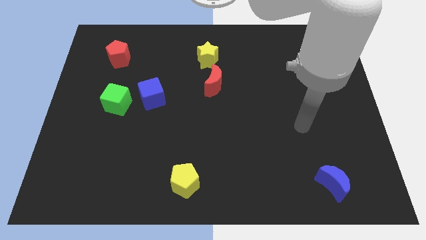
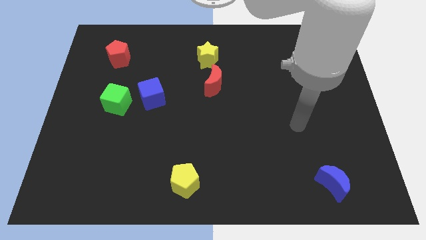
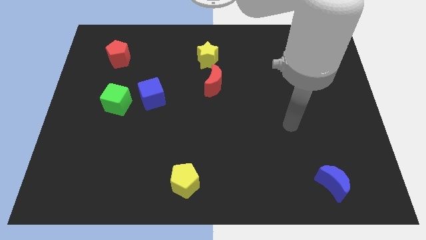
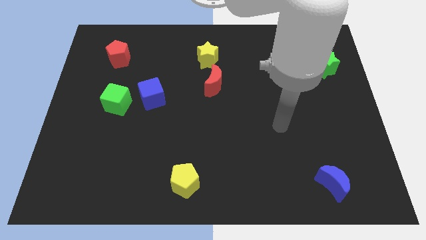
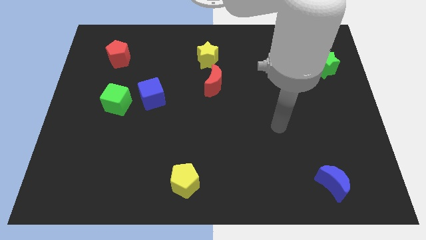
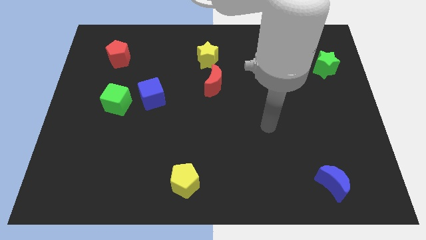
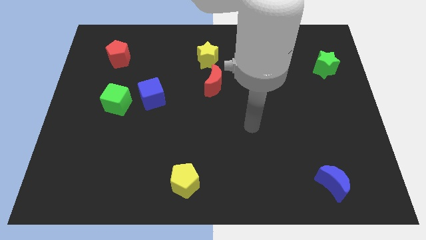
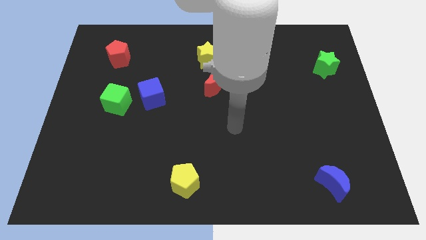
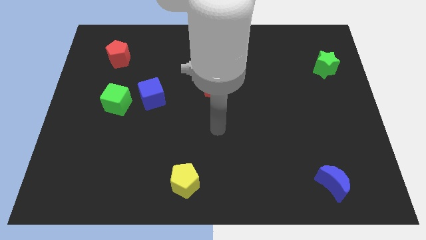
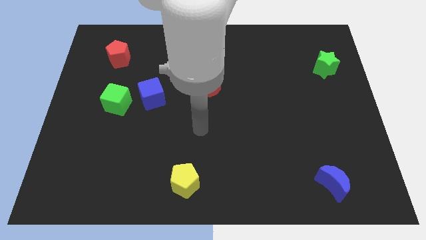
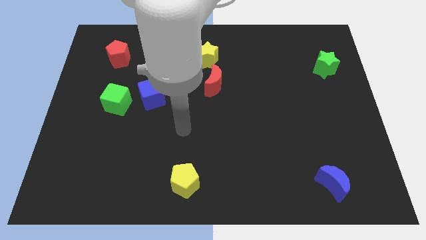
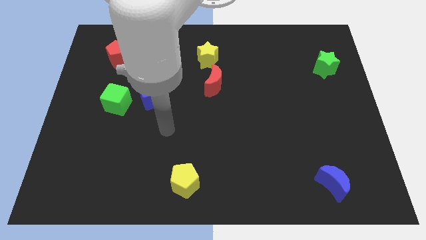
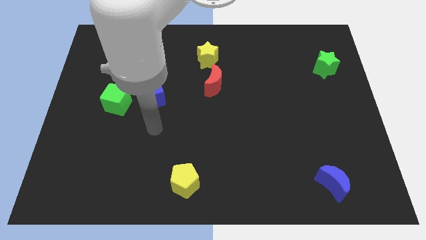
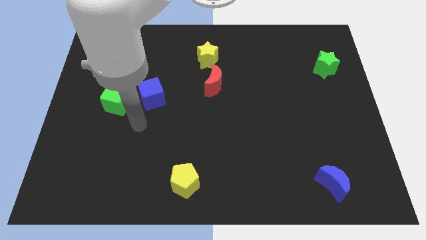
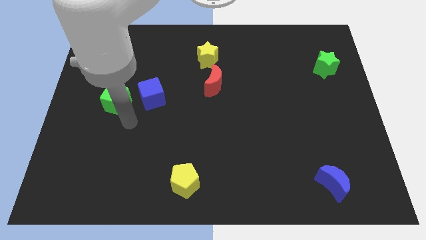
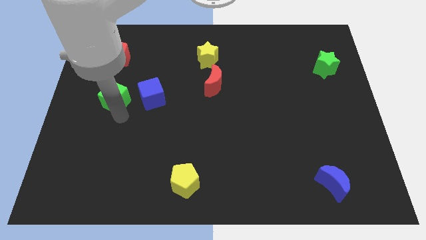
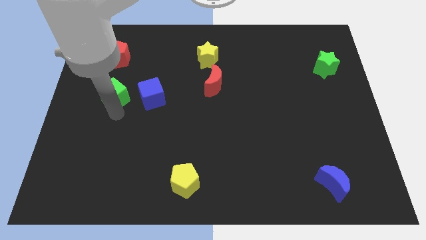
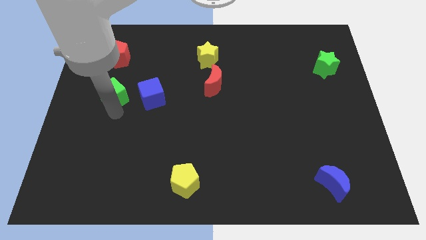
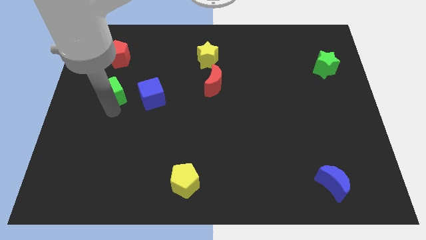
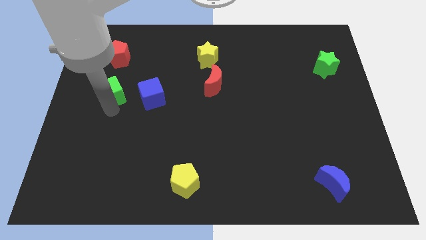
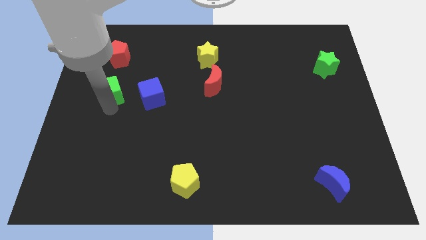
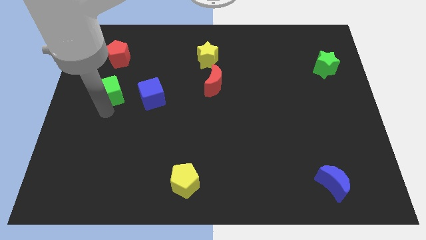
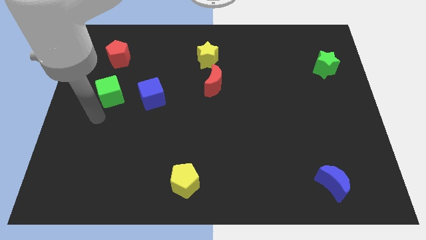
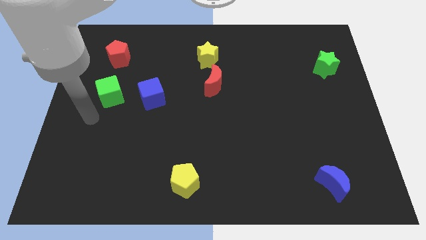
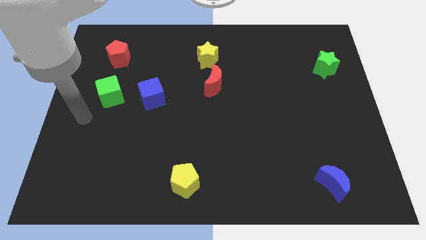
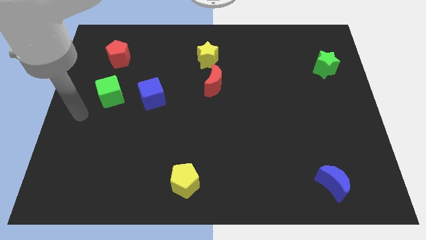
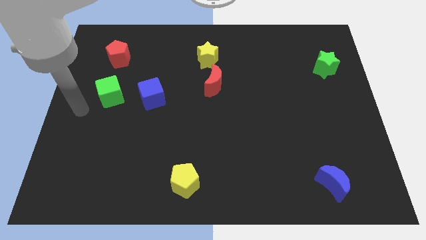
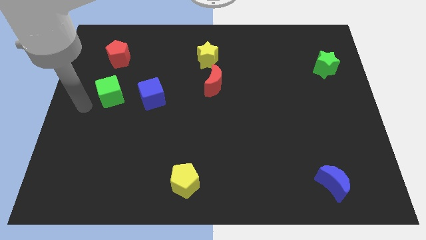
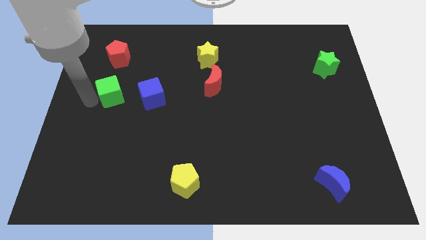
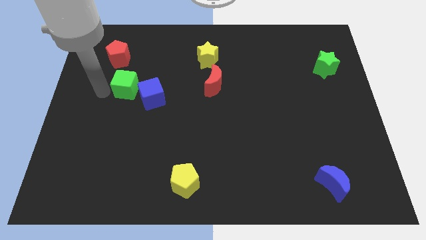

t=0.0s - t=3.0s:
move arm close to green cube

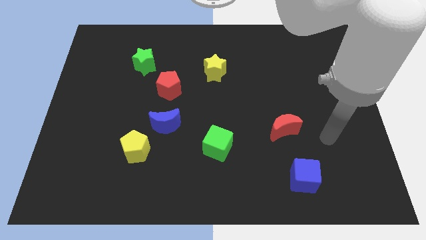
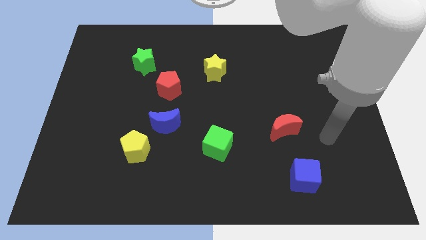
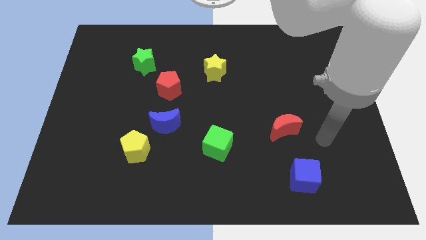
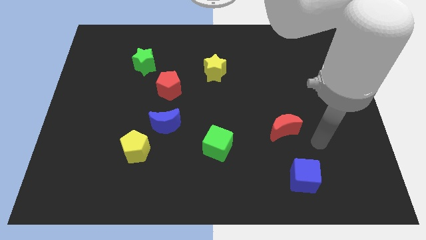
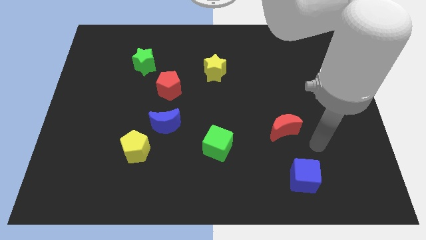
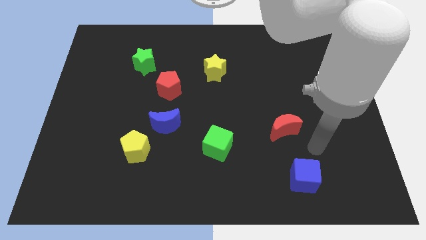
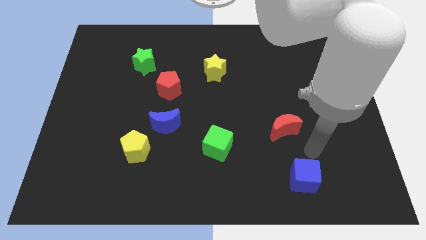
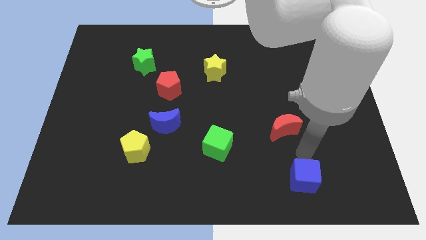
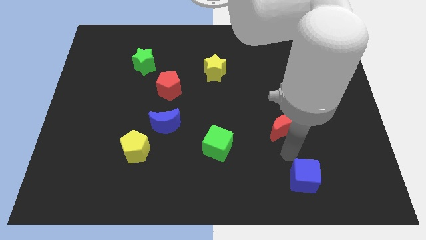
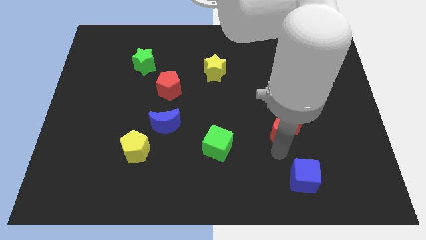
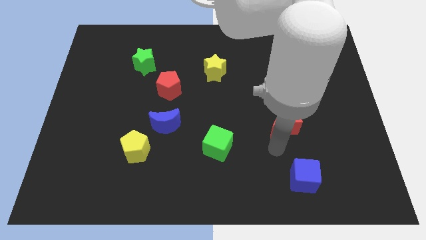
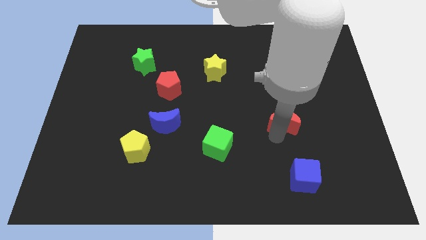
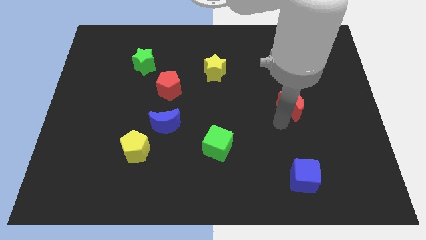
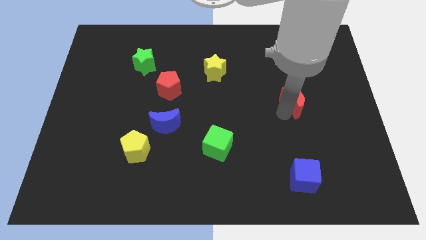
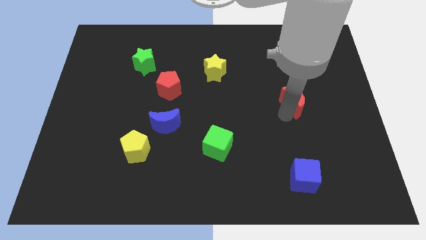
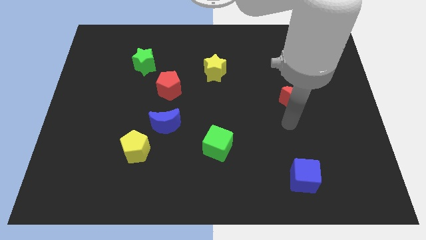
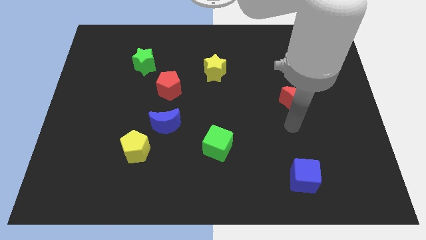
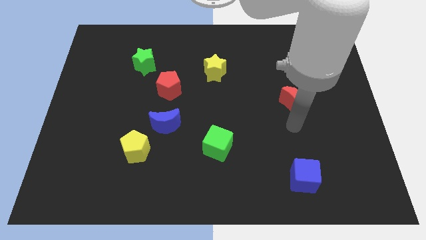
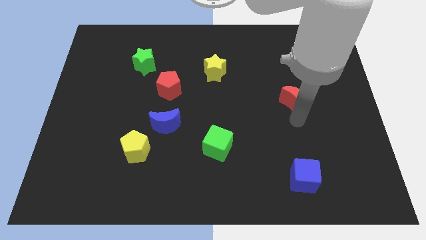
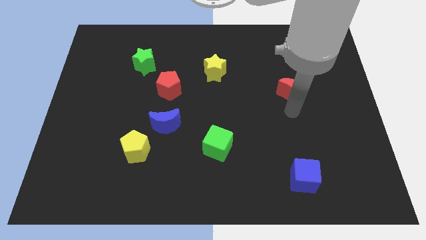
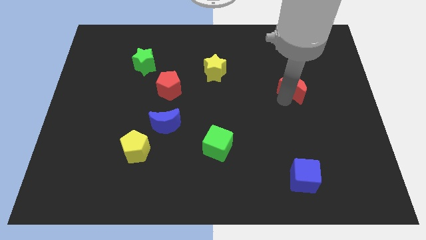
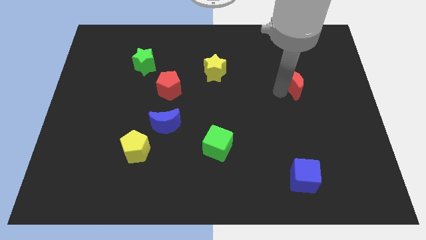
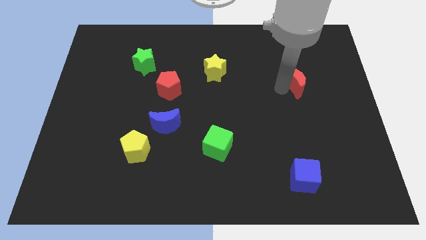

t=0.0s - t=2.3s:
push the red moon upwards of the board

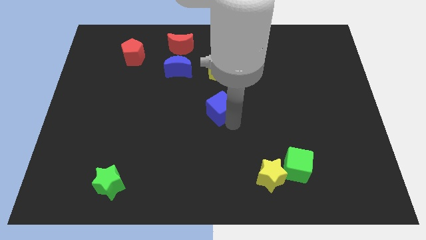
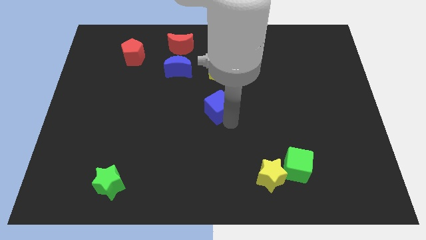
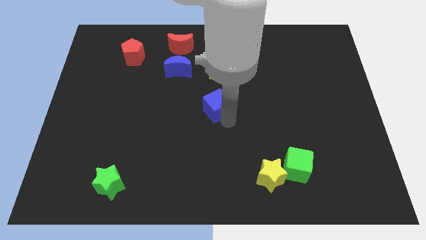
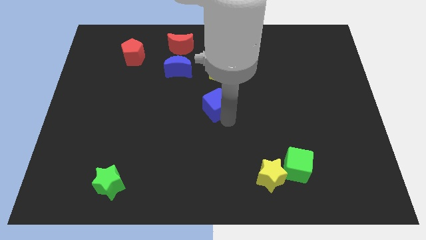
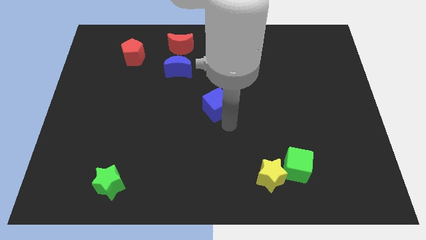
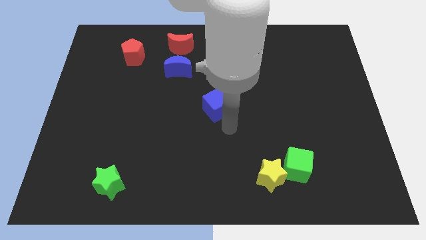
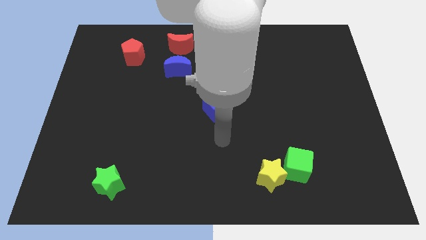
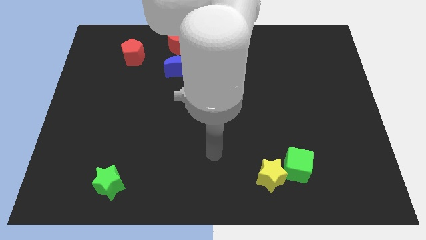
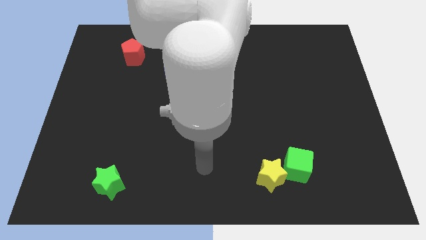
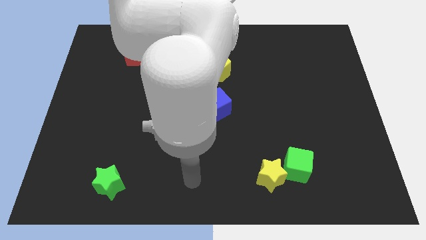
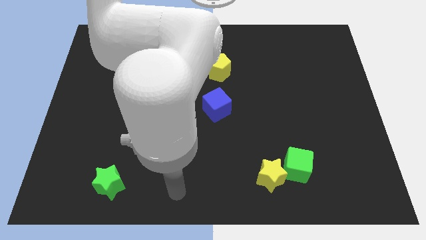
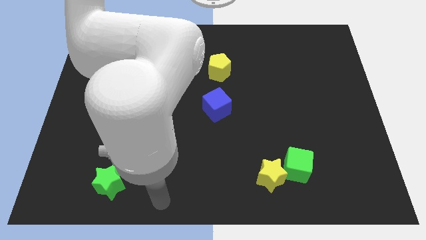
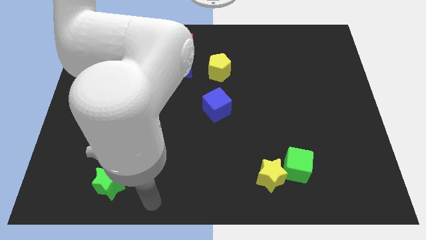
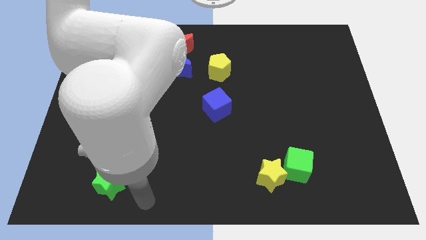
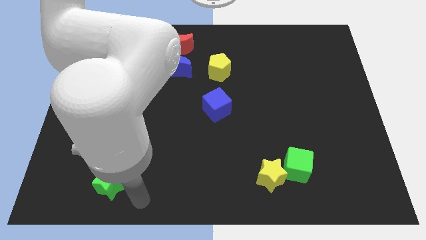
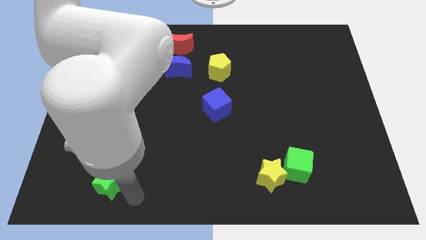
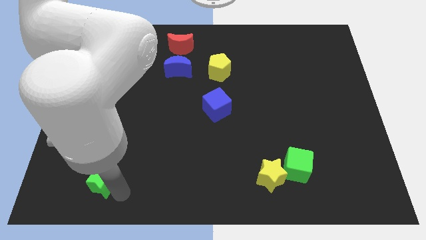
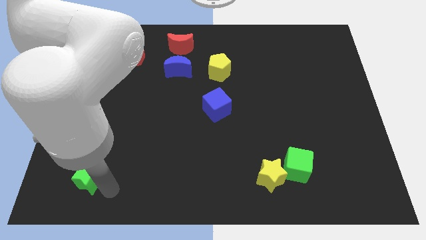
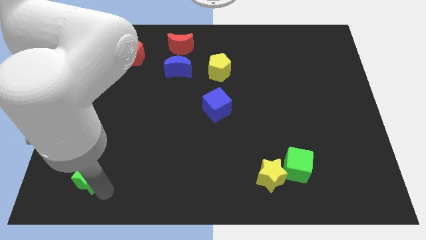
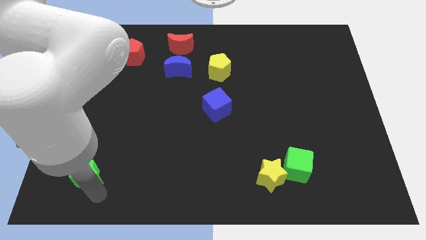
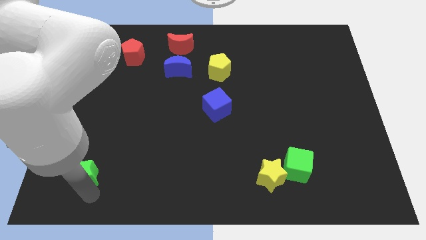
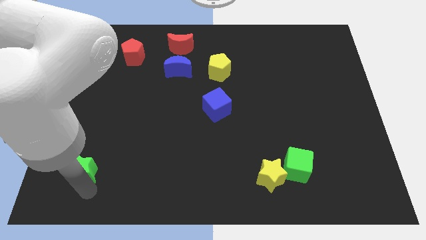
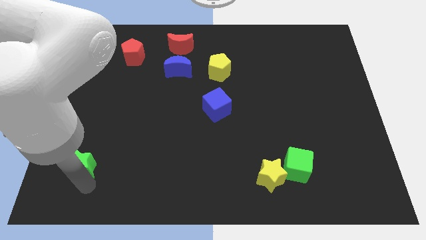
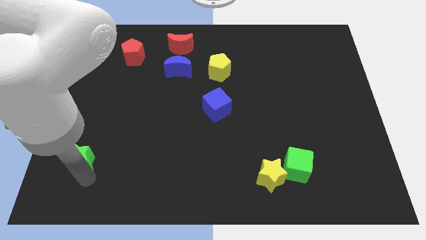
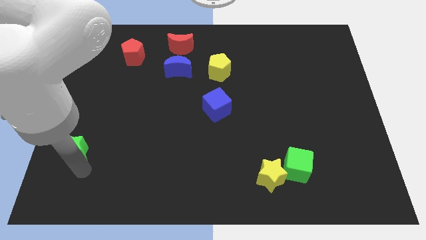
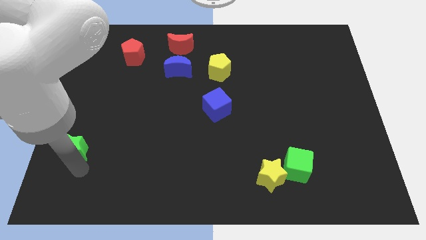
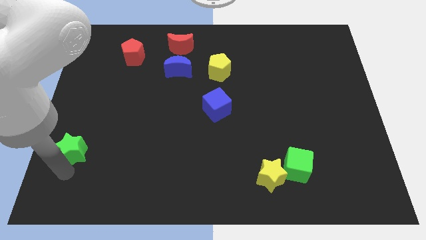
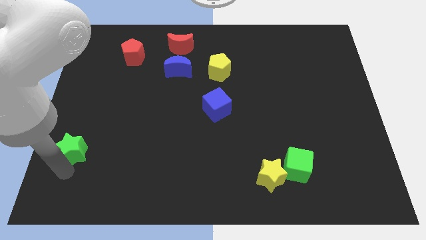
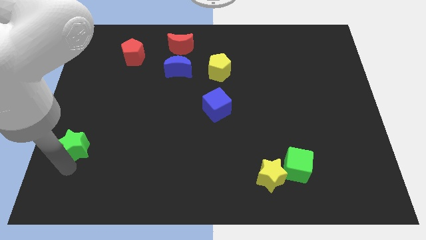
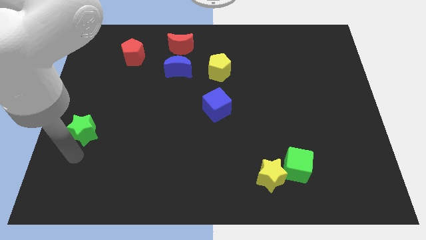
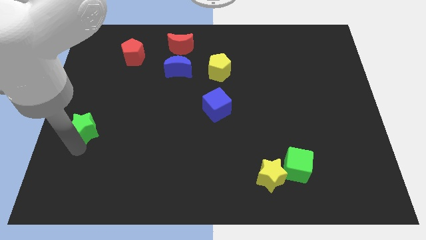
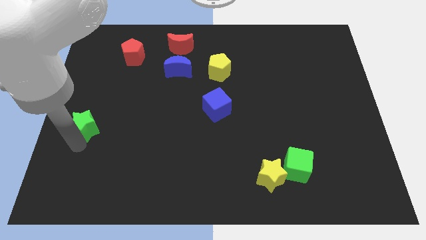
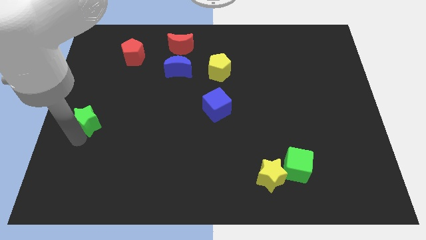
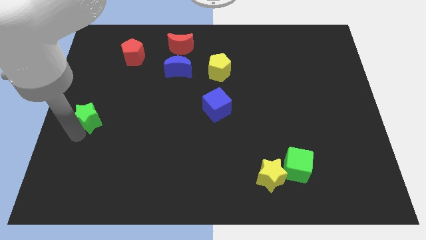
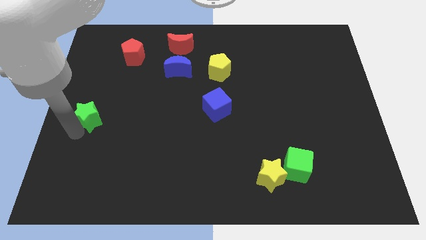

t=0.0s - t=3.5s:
push the green star upwards
